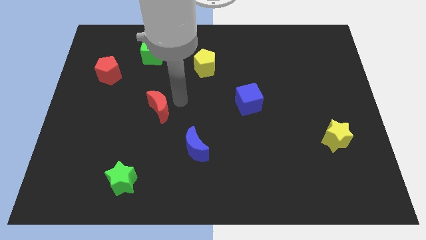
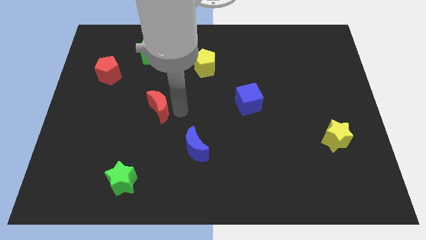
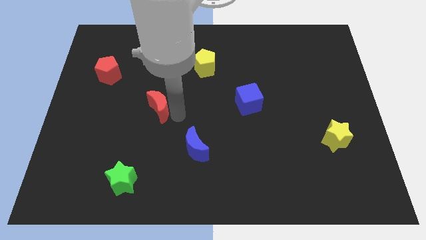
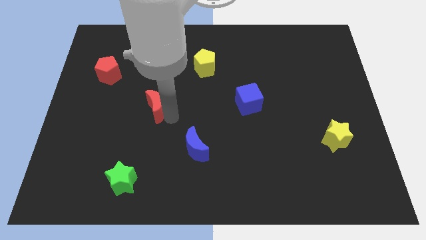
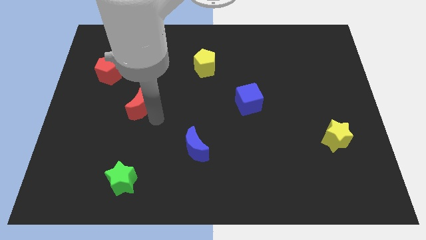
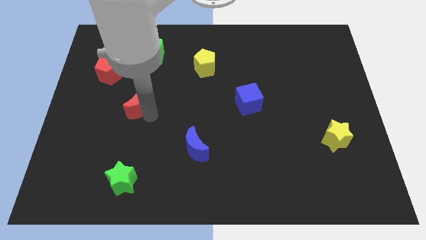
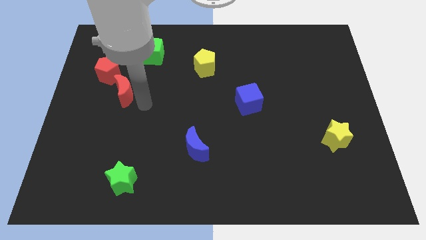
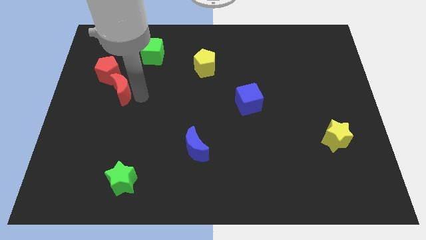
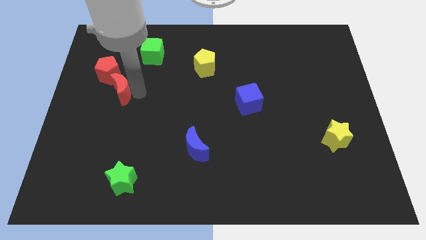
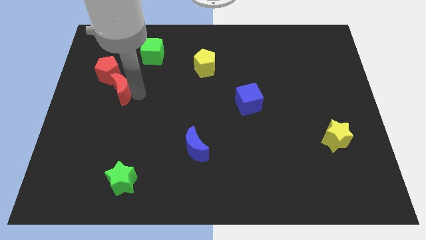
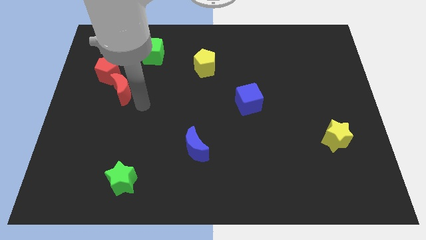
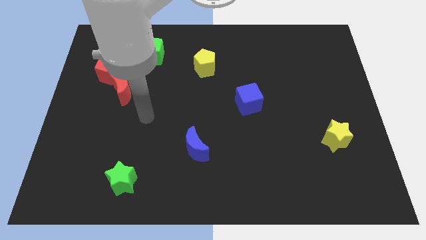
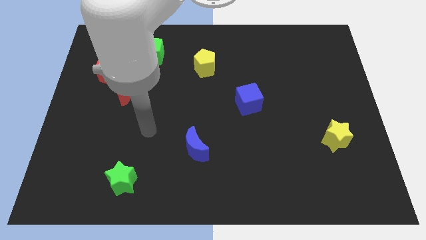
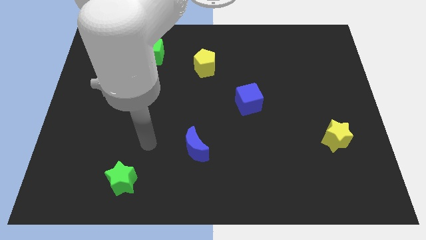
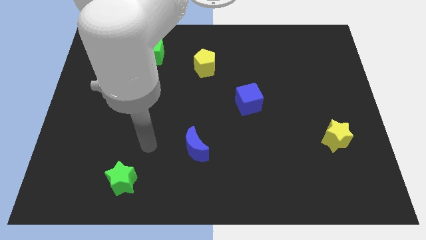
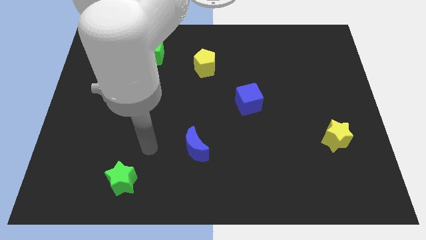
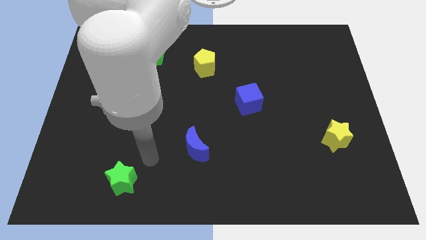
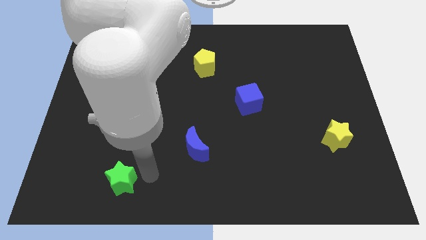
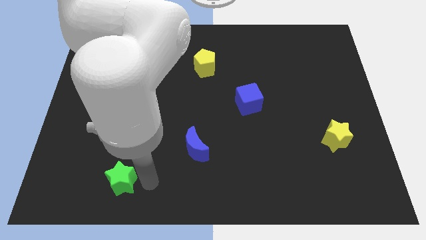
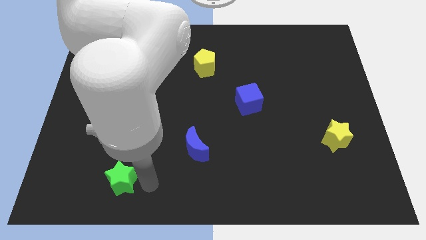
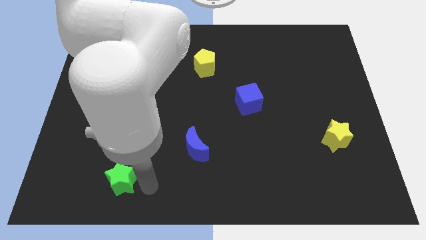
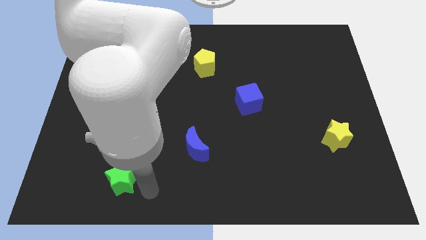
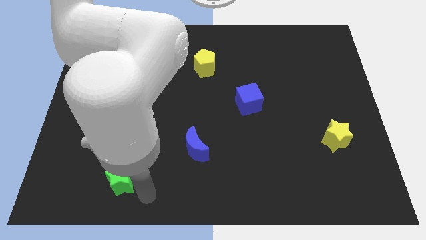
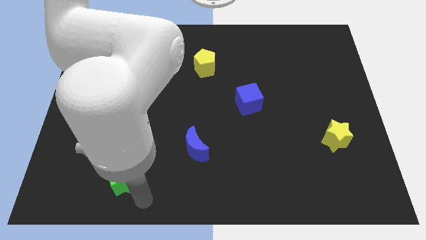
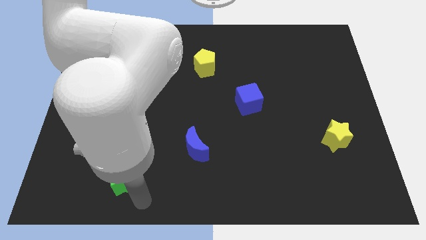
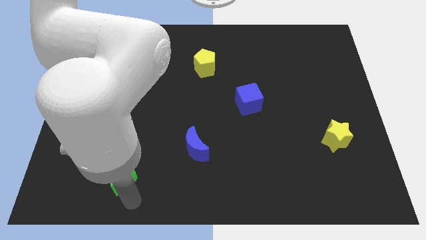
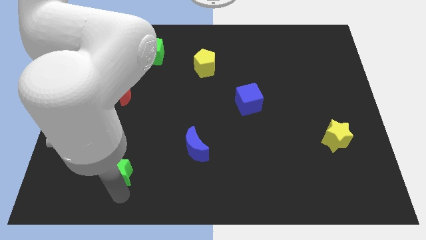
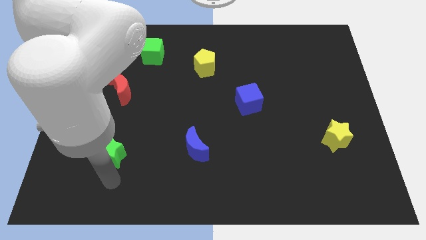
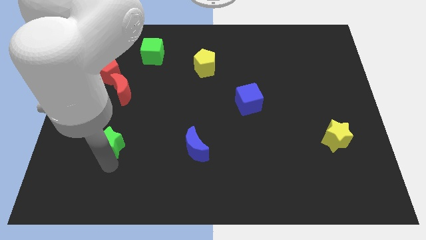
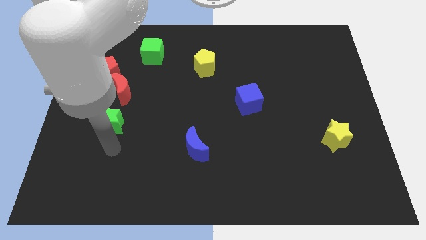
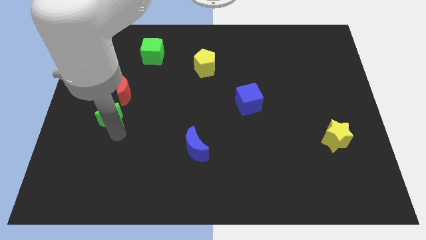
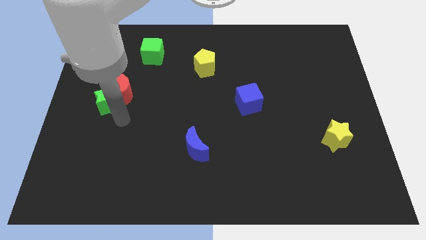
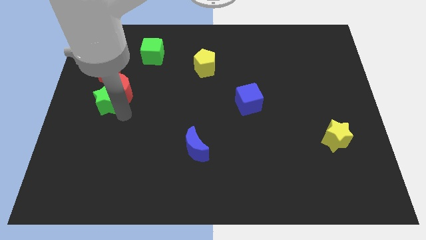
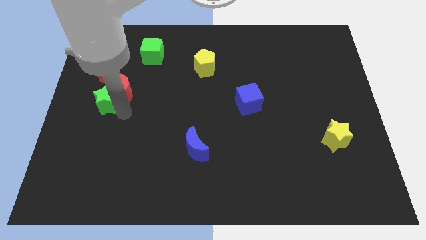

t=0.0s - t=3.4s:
group up the red blocks with the green star at the left side of the board

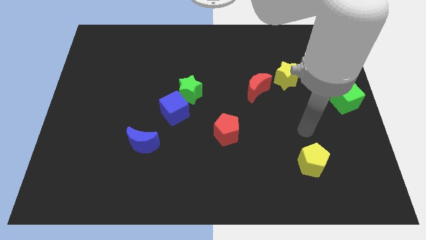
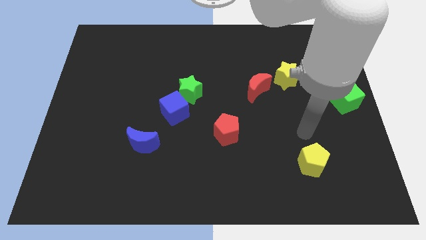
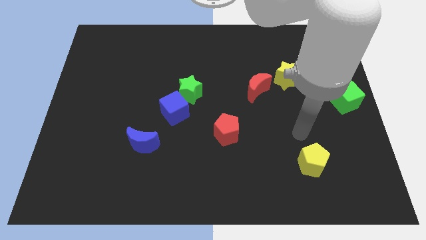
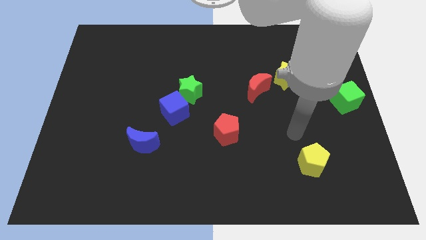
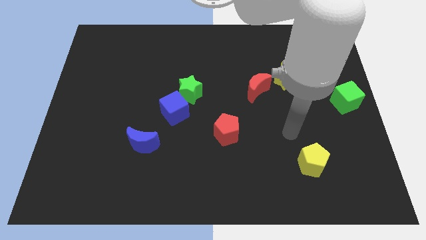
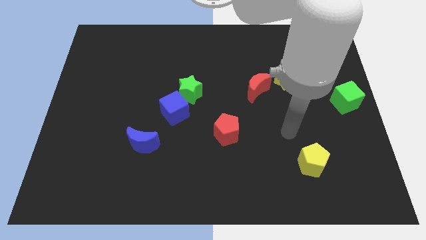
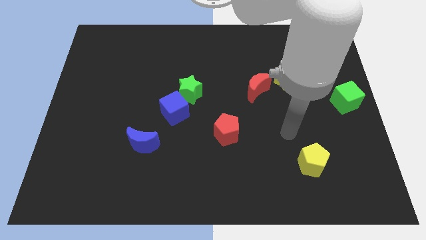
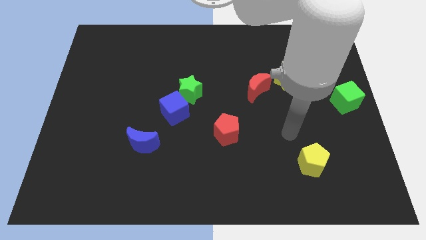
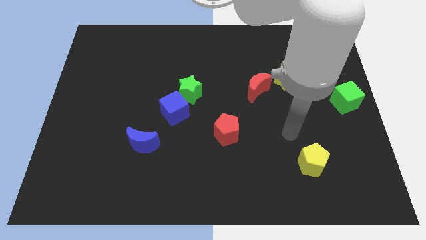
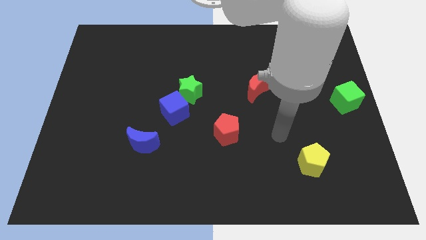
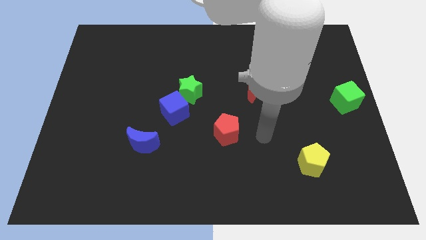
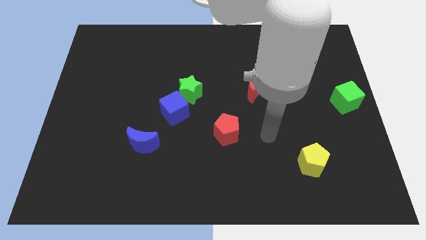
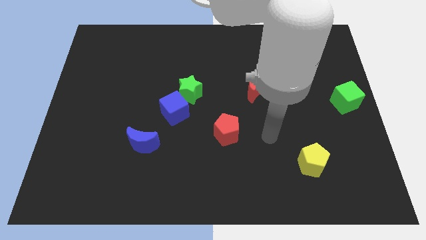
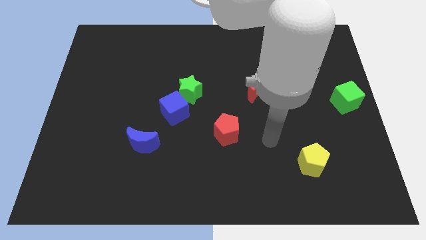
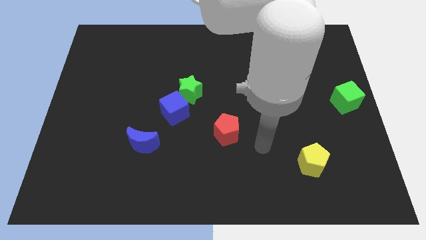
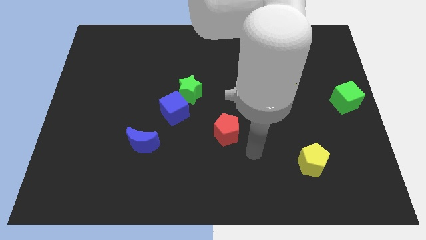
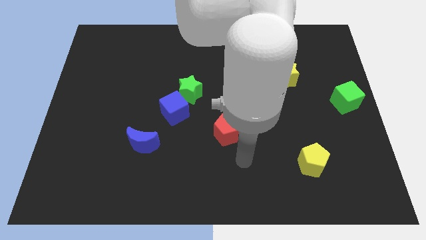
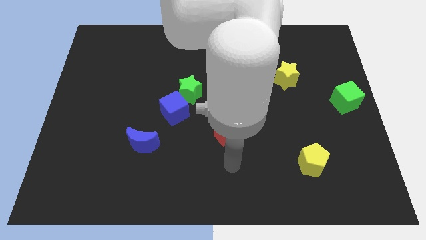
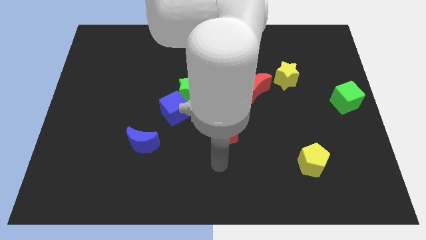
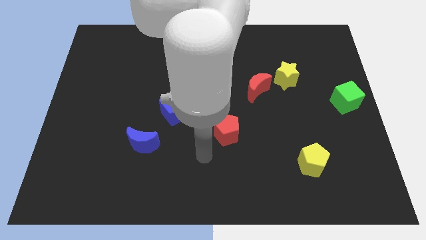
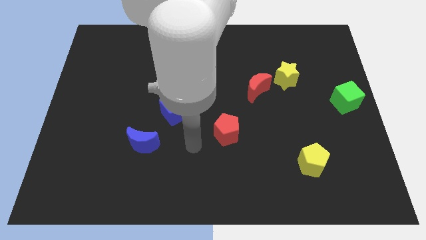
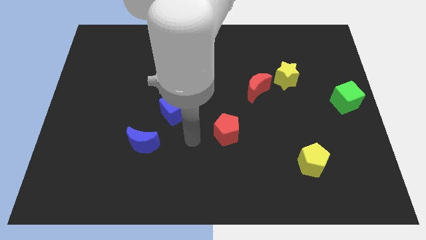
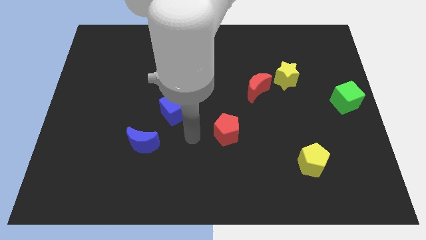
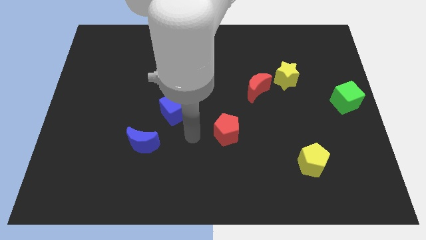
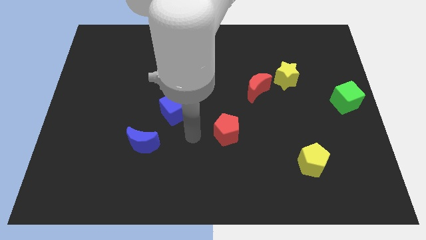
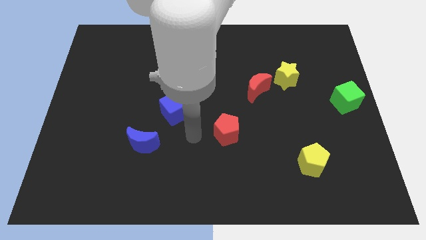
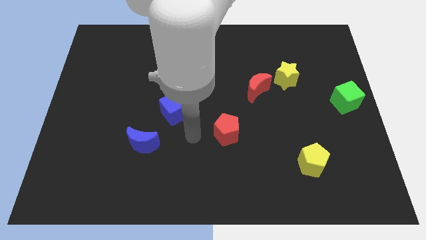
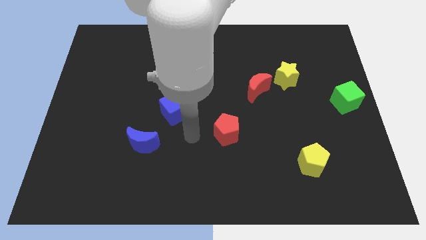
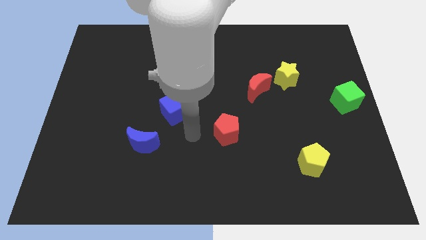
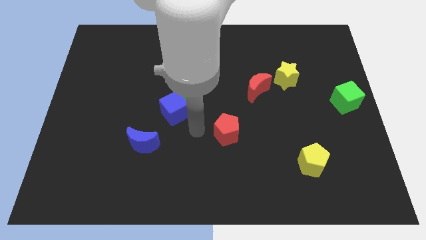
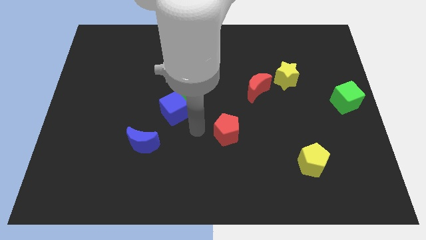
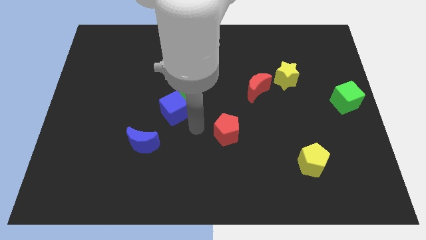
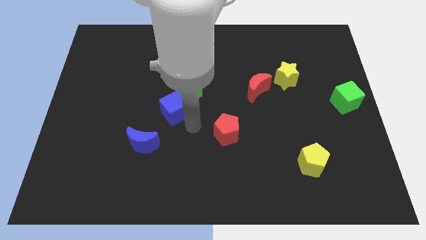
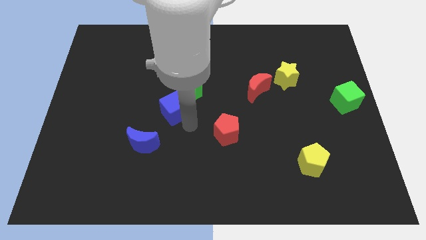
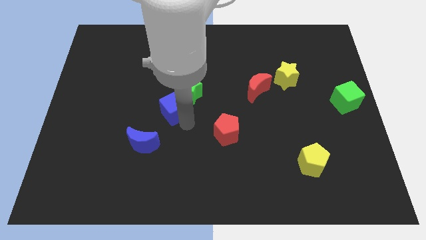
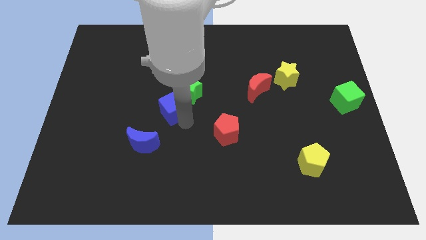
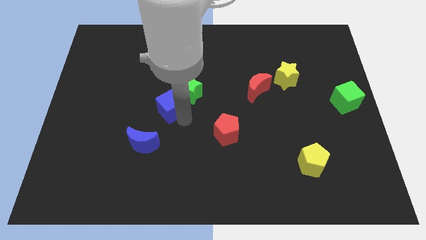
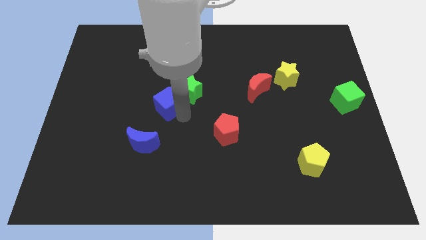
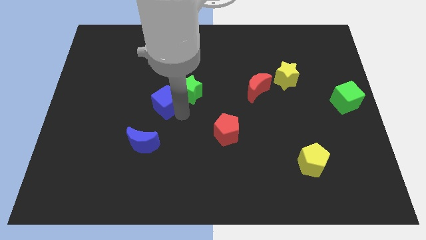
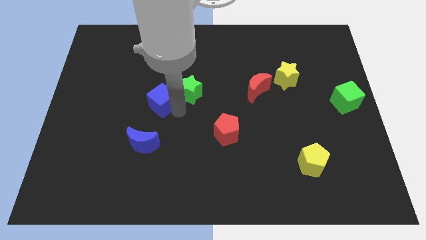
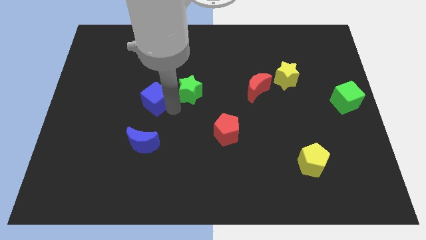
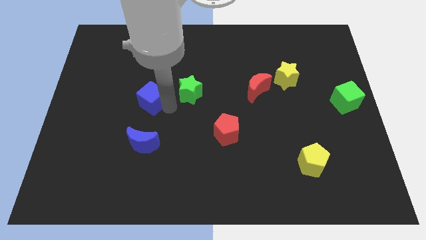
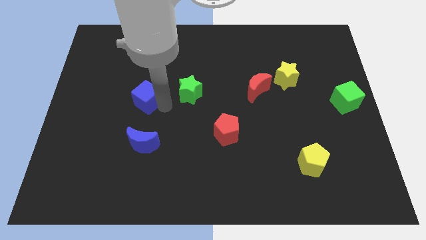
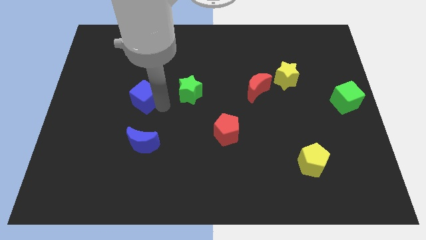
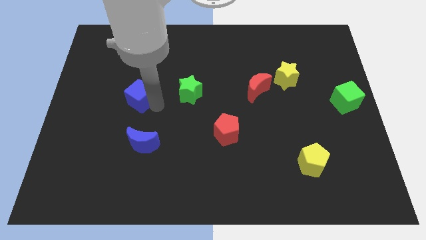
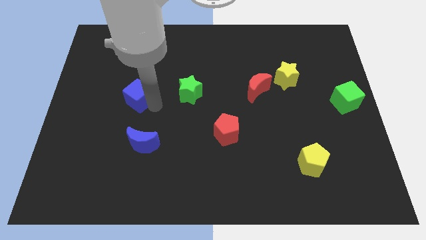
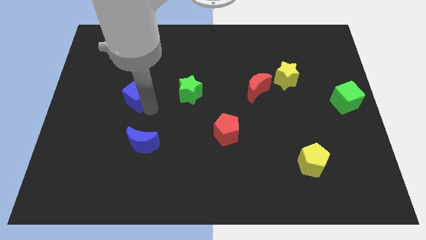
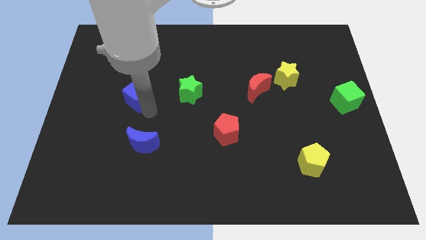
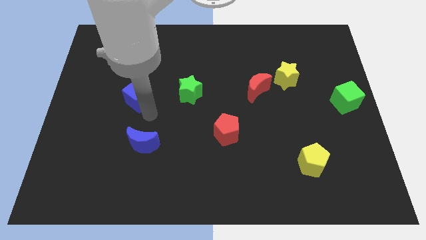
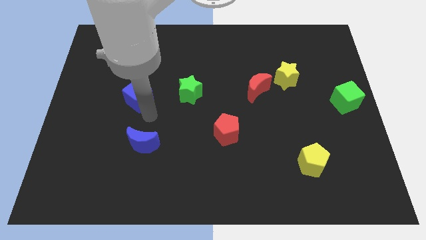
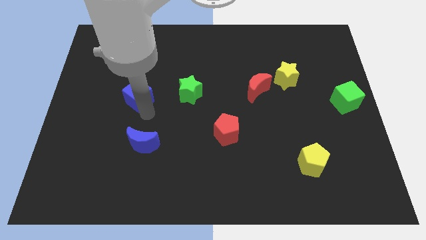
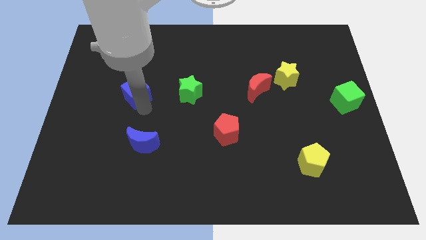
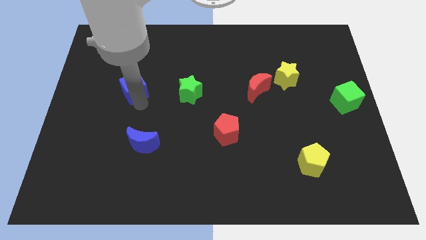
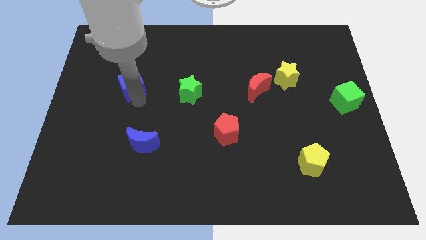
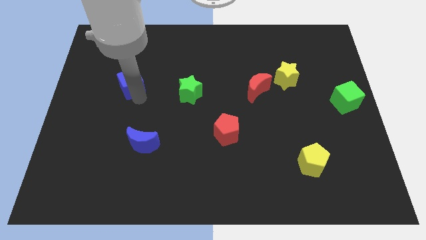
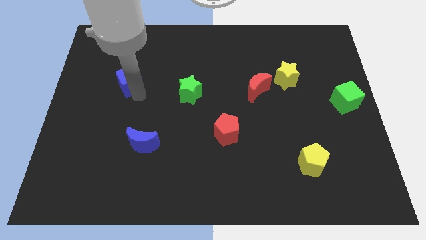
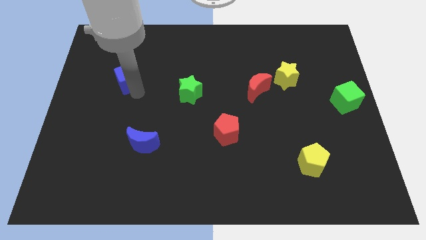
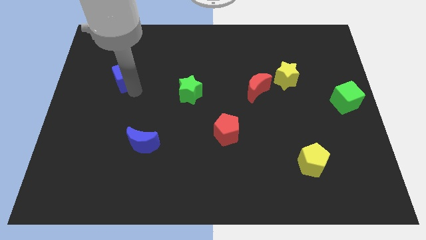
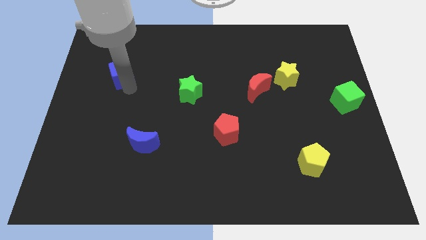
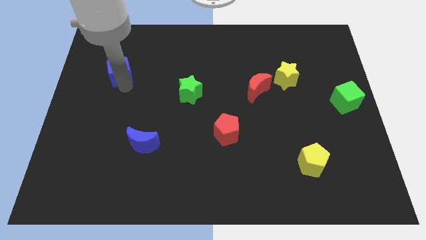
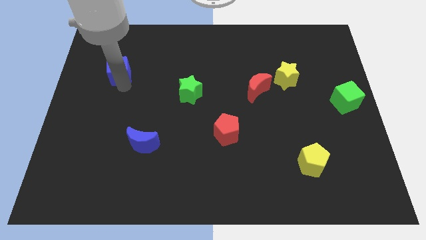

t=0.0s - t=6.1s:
separate blue cube from green star
